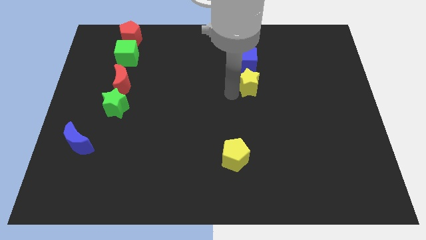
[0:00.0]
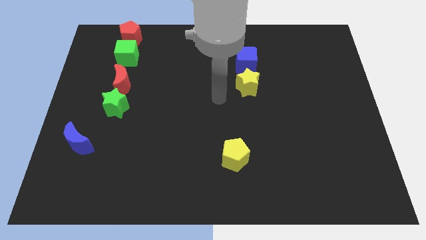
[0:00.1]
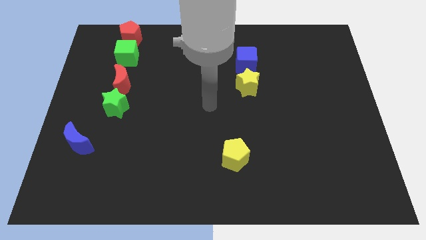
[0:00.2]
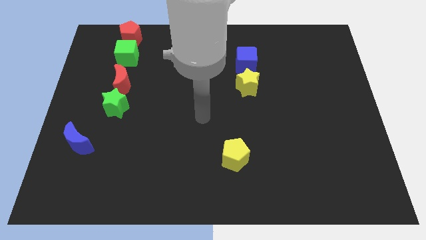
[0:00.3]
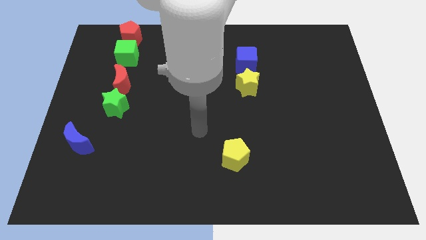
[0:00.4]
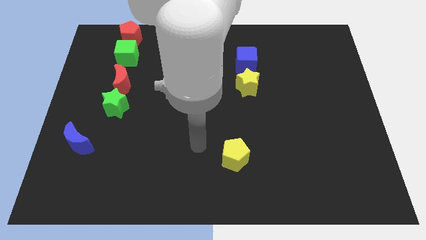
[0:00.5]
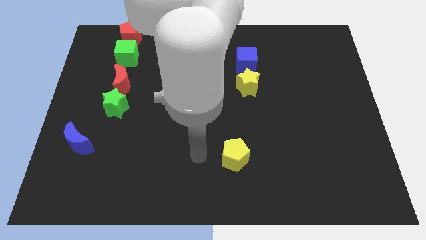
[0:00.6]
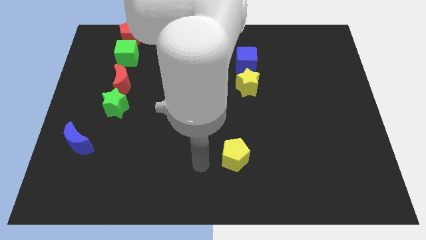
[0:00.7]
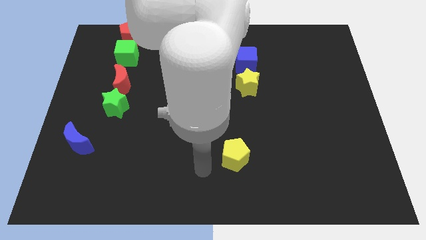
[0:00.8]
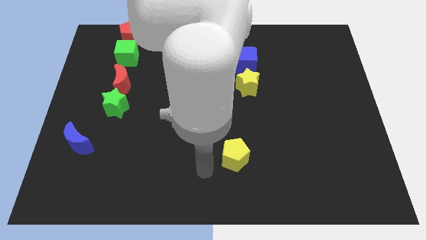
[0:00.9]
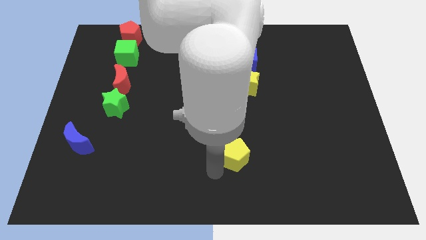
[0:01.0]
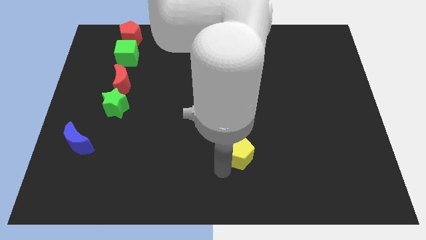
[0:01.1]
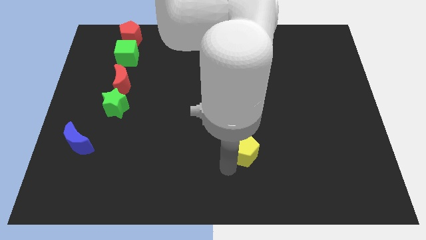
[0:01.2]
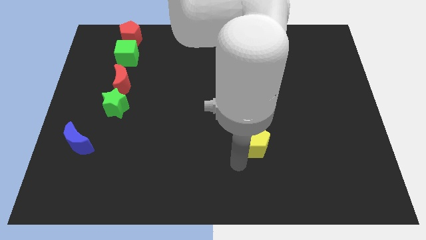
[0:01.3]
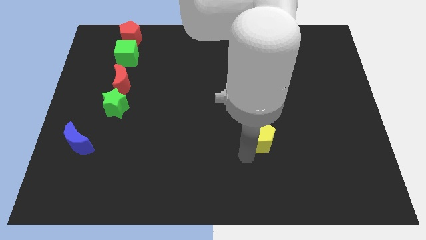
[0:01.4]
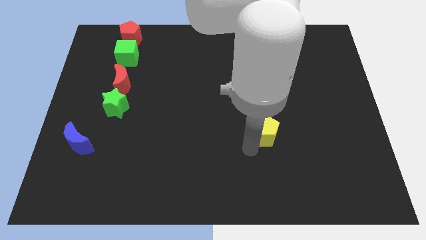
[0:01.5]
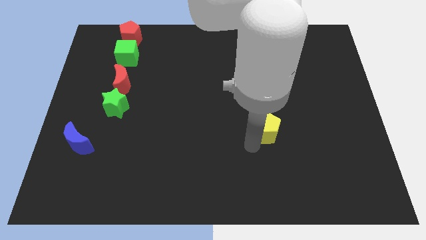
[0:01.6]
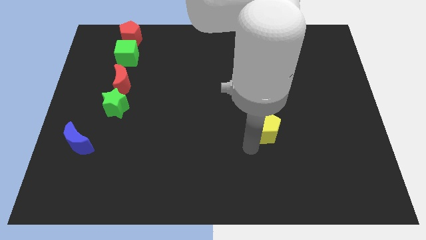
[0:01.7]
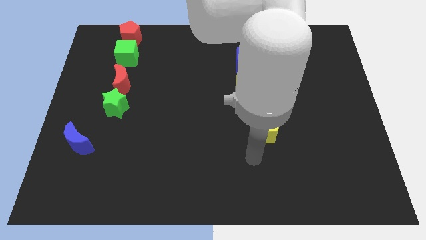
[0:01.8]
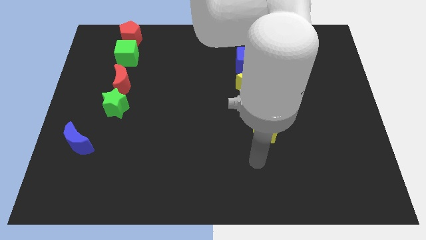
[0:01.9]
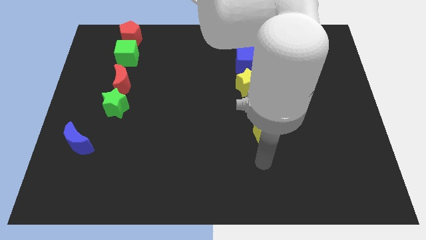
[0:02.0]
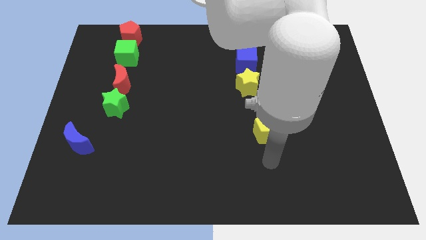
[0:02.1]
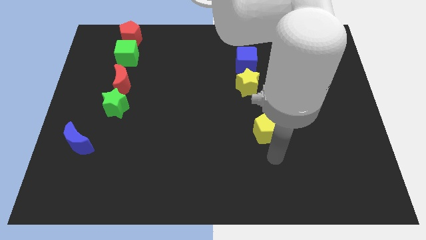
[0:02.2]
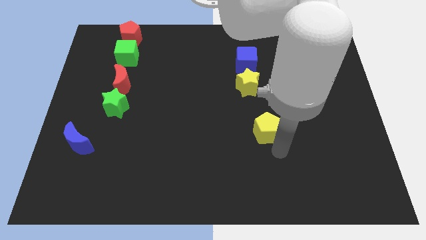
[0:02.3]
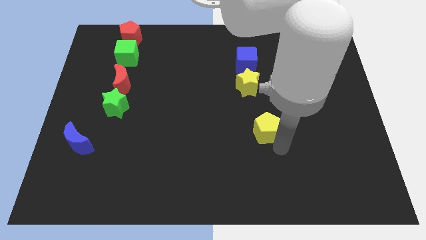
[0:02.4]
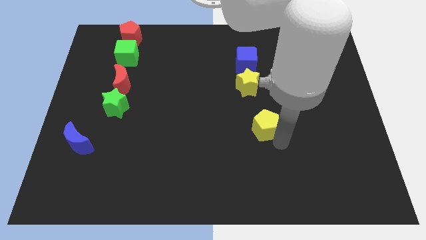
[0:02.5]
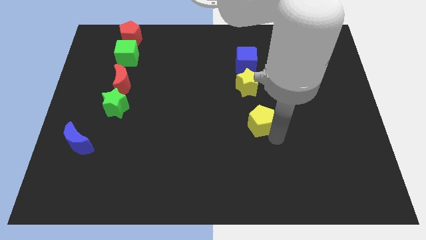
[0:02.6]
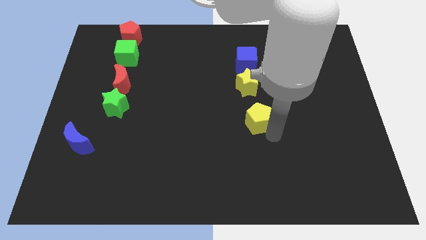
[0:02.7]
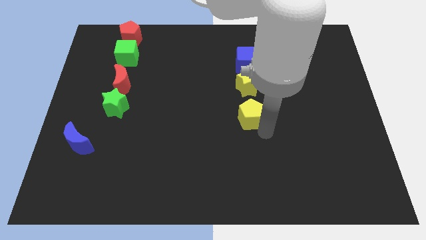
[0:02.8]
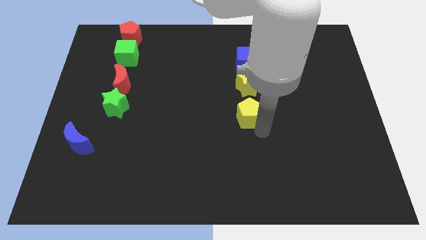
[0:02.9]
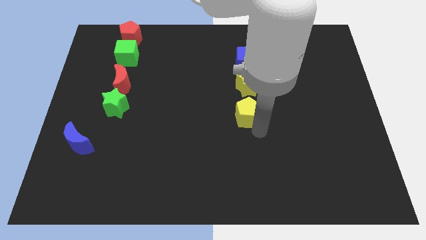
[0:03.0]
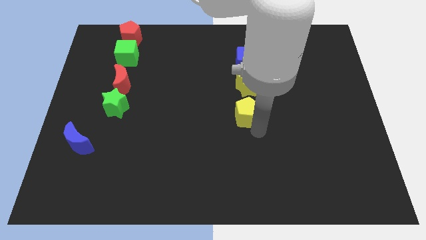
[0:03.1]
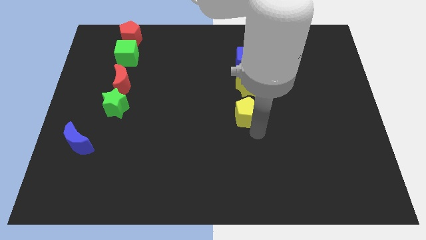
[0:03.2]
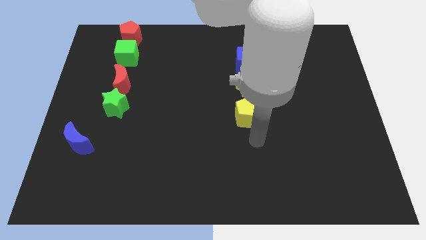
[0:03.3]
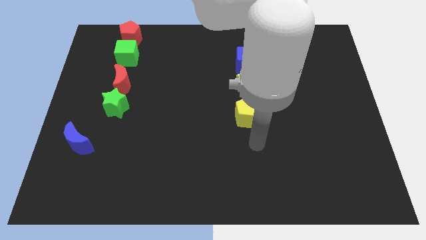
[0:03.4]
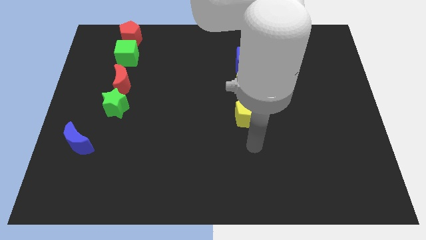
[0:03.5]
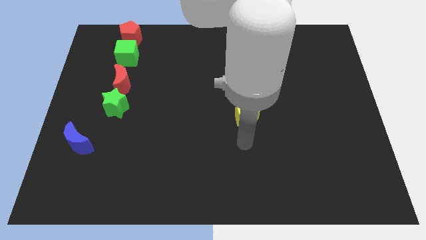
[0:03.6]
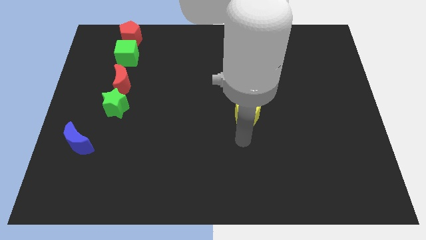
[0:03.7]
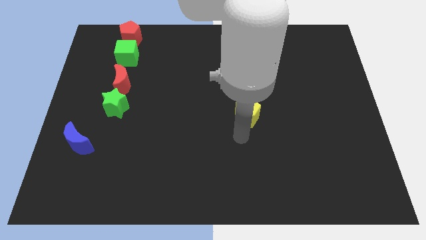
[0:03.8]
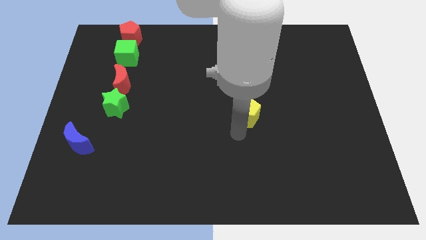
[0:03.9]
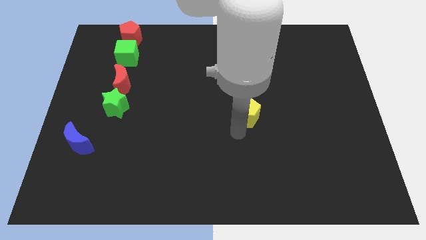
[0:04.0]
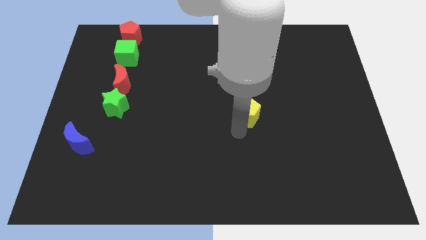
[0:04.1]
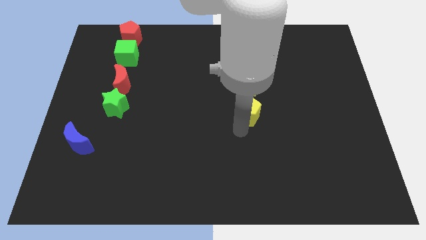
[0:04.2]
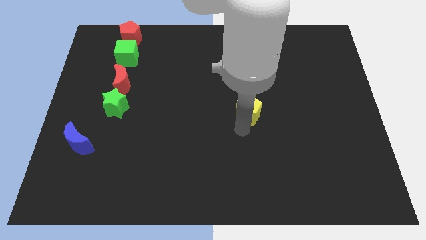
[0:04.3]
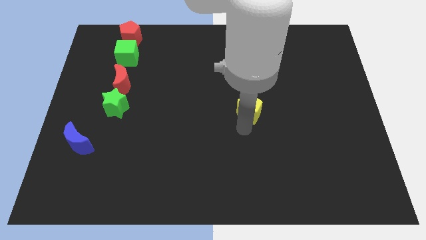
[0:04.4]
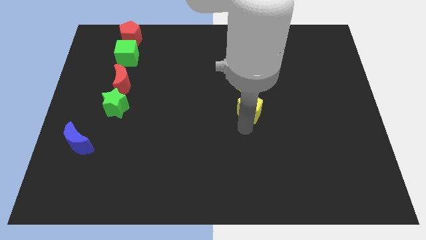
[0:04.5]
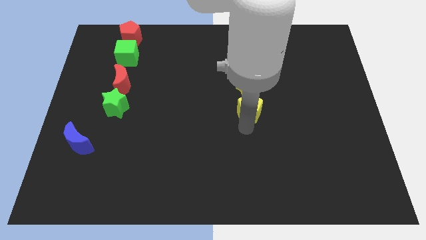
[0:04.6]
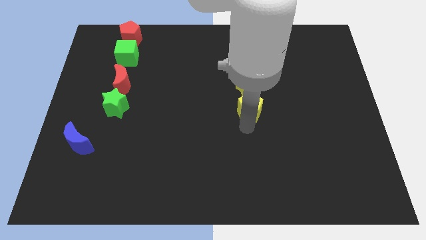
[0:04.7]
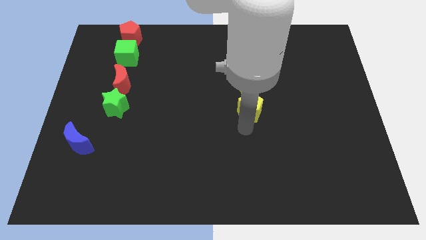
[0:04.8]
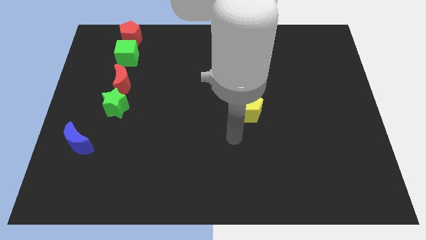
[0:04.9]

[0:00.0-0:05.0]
place yellow pentagon below the yellow star

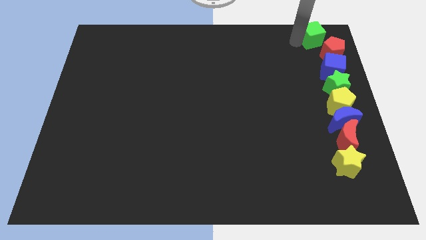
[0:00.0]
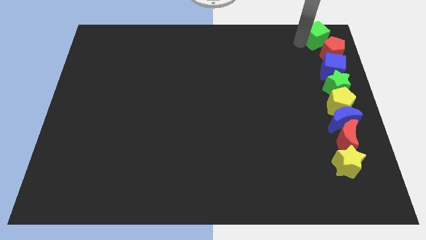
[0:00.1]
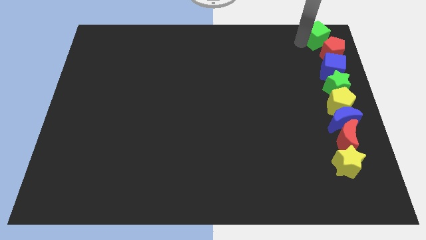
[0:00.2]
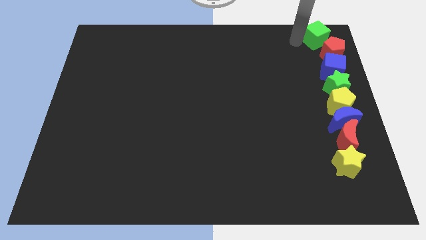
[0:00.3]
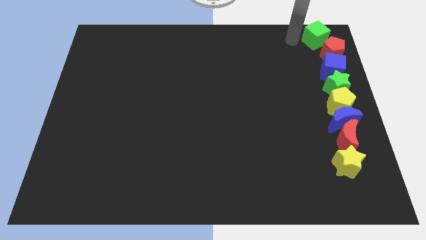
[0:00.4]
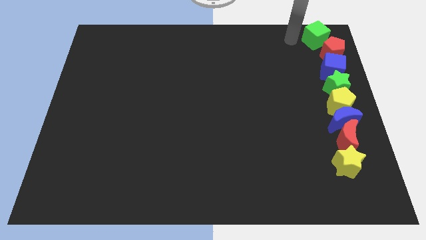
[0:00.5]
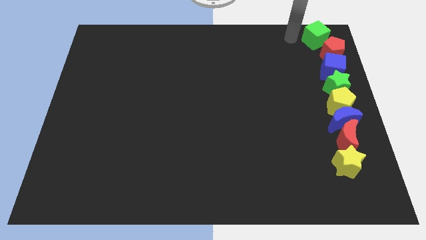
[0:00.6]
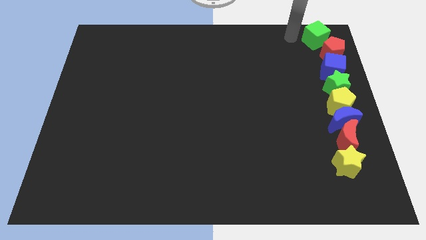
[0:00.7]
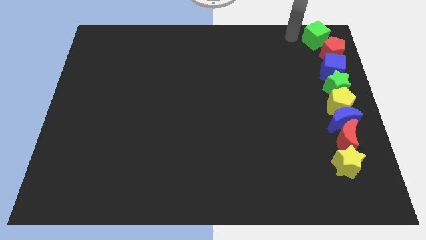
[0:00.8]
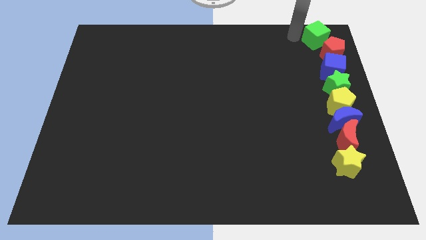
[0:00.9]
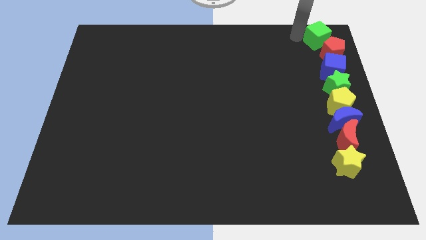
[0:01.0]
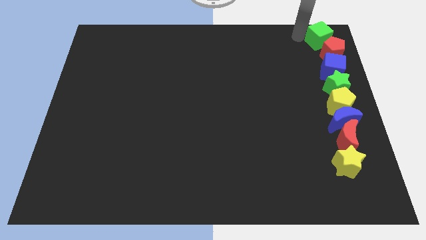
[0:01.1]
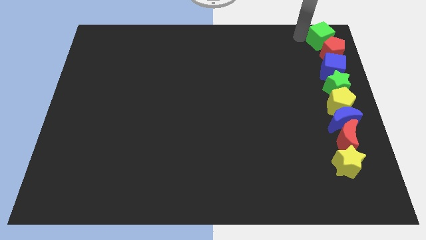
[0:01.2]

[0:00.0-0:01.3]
place green cube at the top of vertical line of blocks

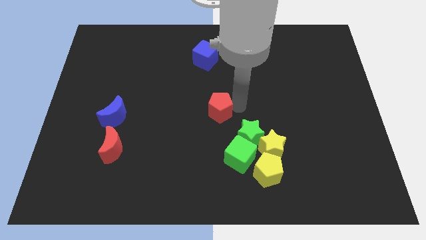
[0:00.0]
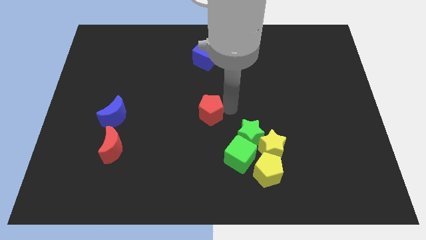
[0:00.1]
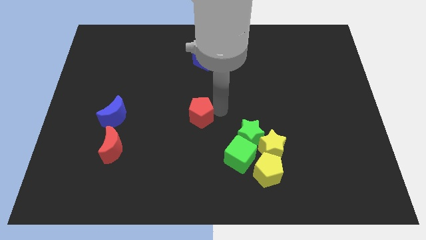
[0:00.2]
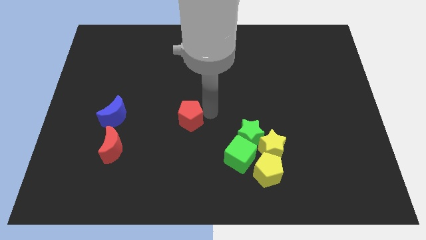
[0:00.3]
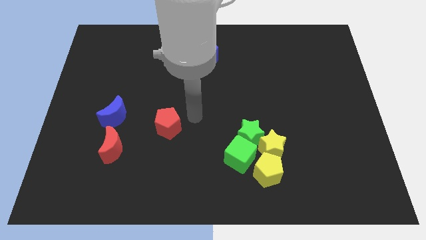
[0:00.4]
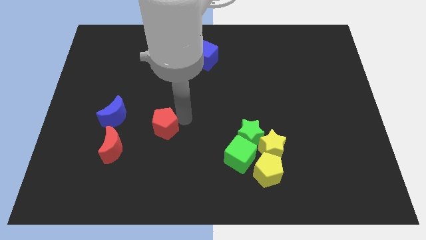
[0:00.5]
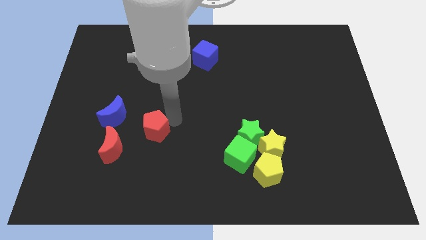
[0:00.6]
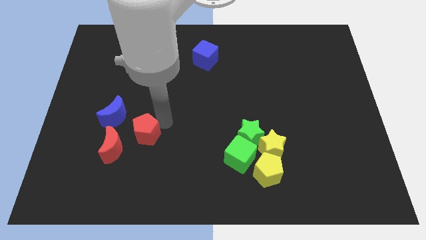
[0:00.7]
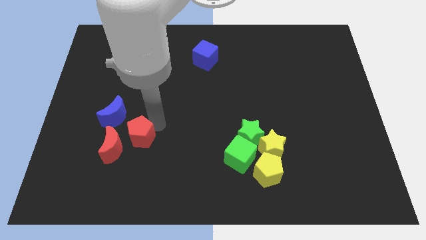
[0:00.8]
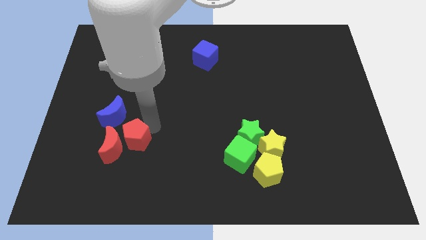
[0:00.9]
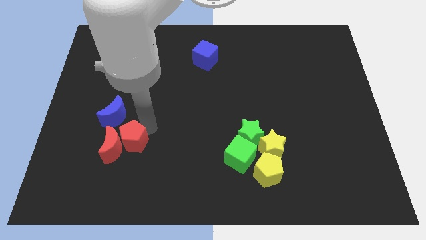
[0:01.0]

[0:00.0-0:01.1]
move red pentagon into red moon

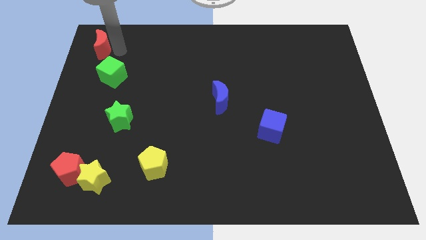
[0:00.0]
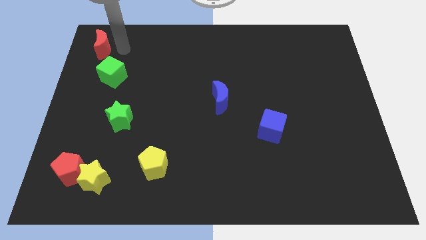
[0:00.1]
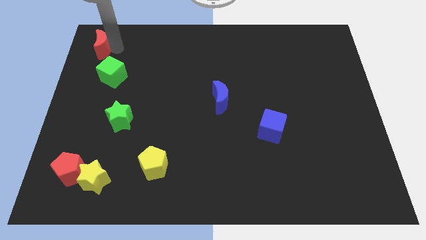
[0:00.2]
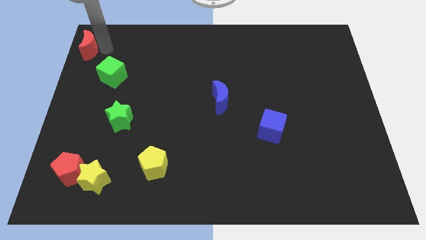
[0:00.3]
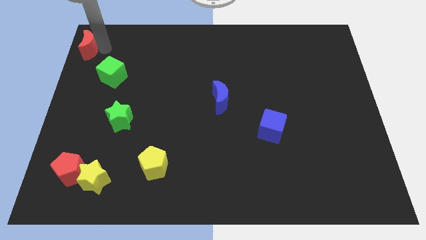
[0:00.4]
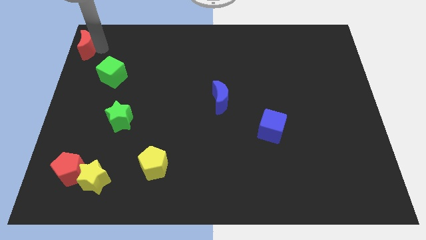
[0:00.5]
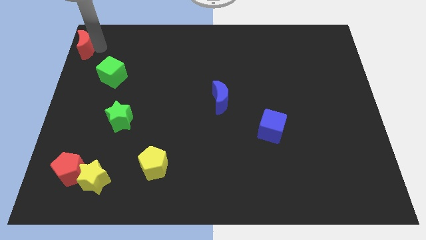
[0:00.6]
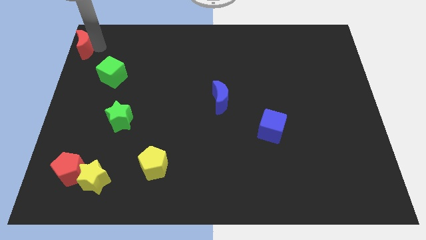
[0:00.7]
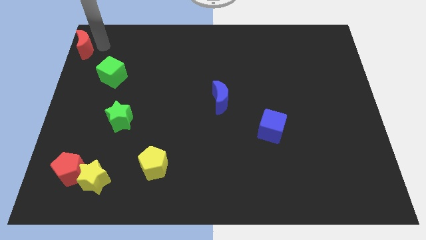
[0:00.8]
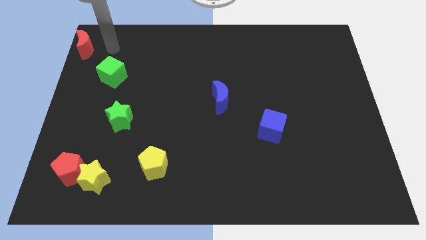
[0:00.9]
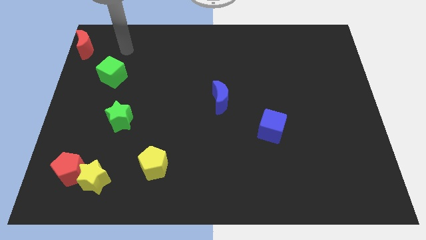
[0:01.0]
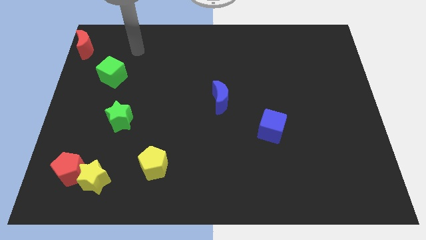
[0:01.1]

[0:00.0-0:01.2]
push the red moon towards left side of the board

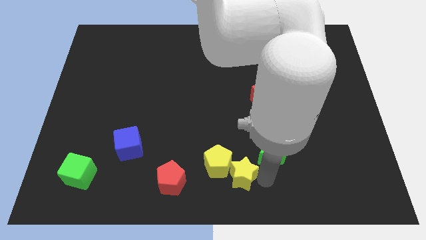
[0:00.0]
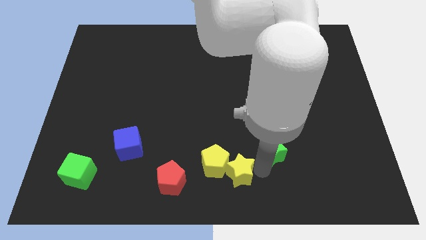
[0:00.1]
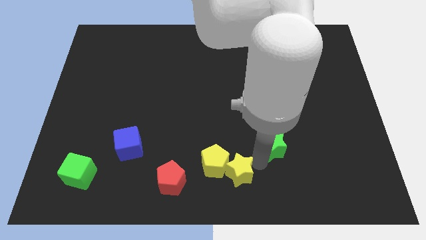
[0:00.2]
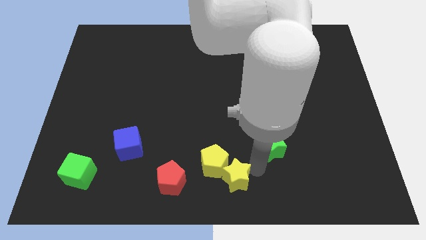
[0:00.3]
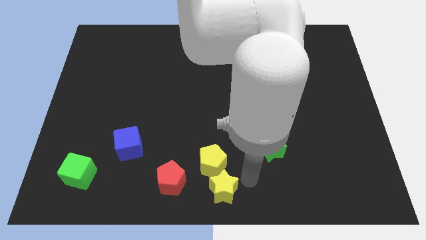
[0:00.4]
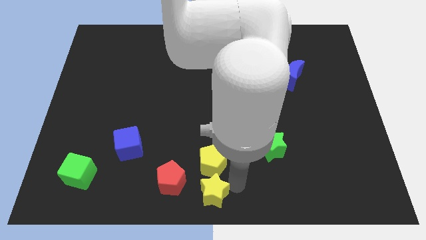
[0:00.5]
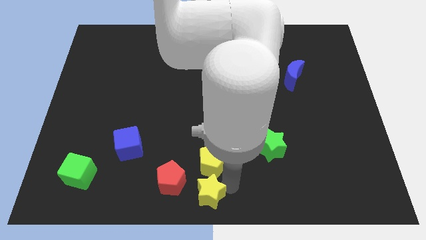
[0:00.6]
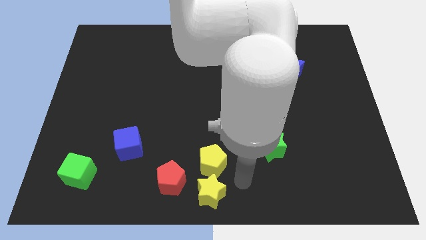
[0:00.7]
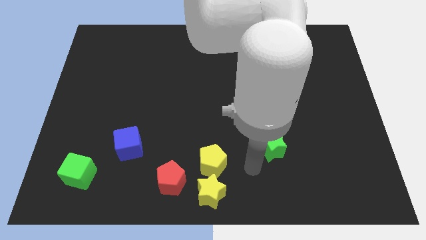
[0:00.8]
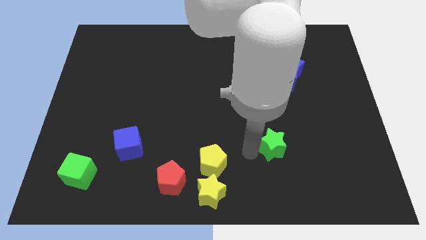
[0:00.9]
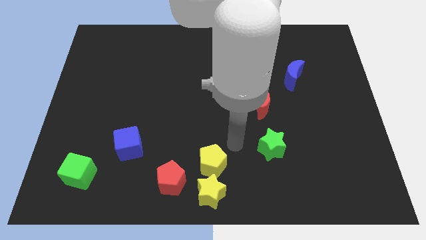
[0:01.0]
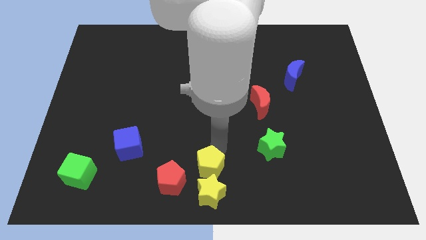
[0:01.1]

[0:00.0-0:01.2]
place yellow star below yellow pentagon
